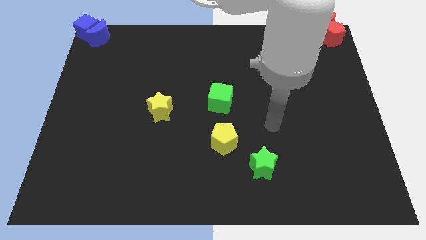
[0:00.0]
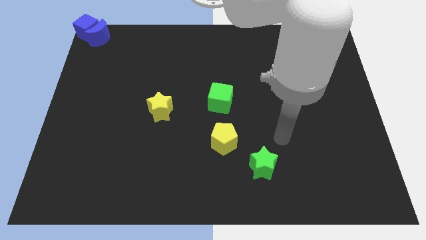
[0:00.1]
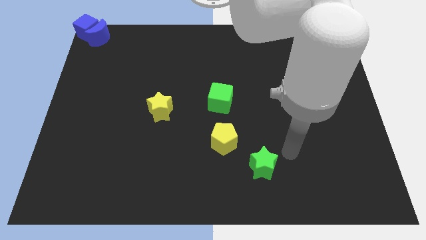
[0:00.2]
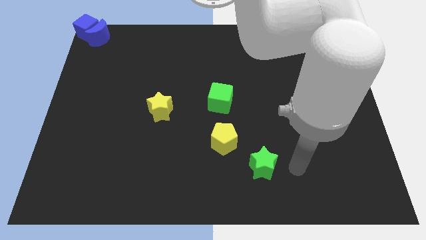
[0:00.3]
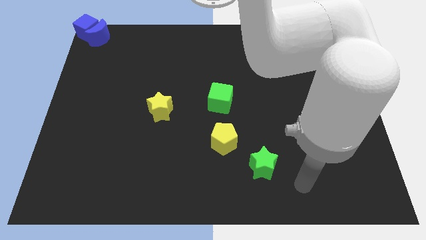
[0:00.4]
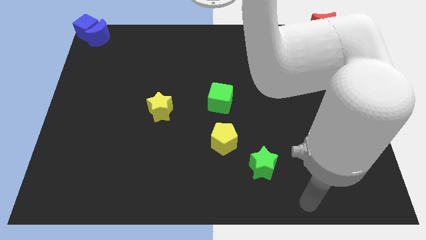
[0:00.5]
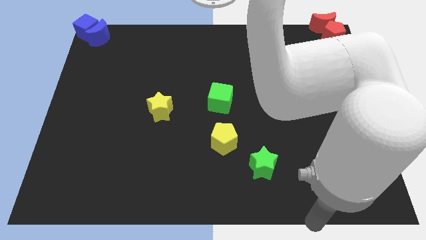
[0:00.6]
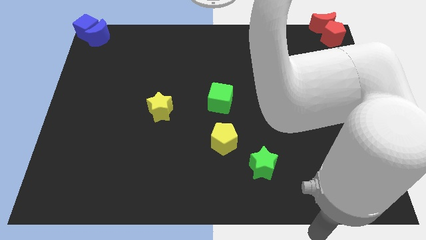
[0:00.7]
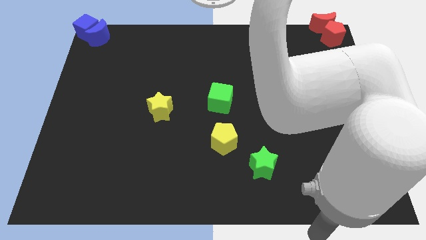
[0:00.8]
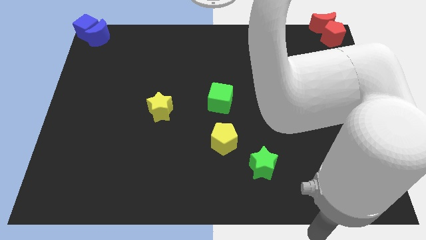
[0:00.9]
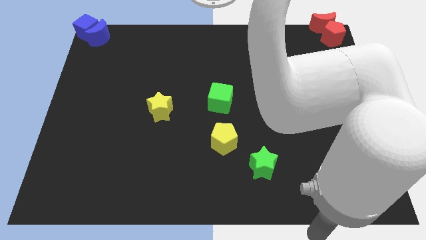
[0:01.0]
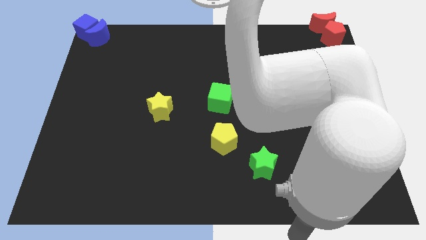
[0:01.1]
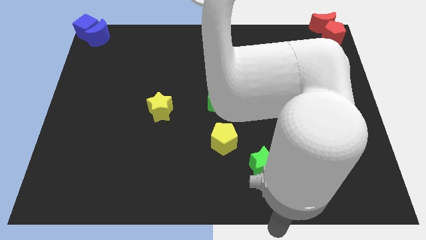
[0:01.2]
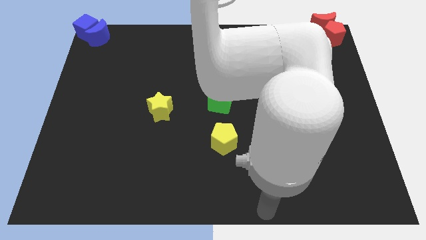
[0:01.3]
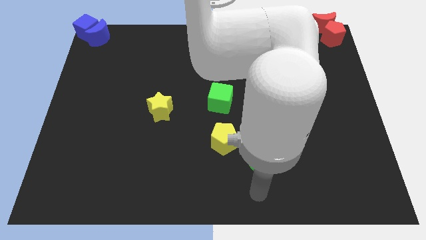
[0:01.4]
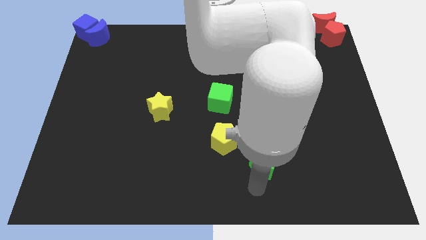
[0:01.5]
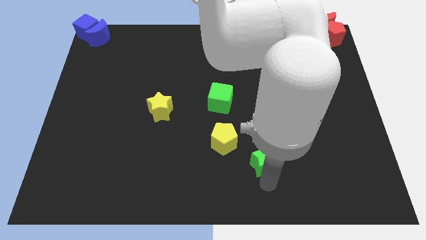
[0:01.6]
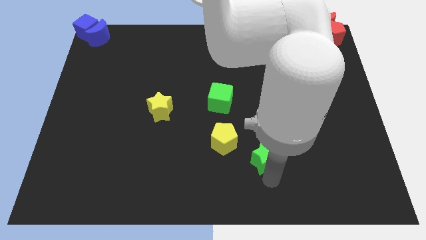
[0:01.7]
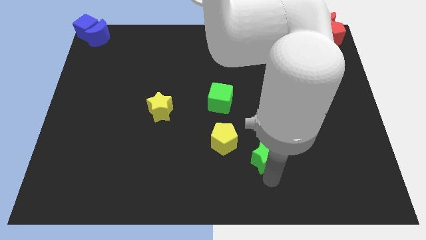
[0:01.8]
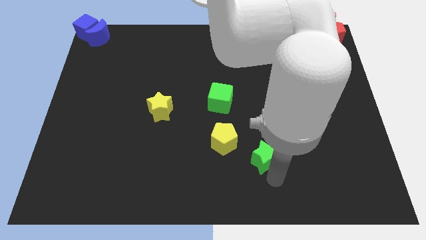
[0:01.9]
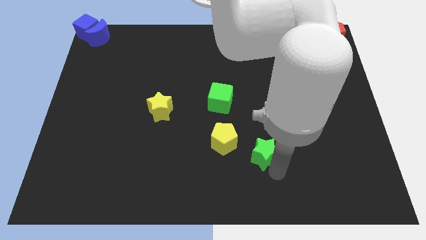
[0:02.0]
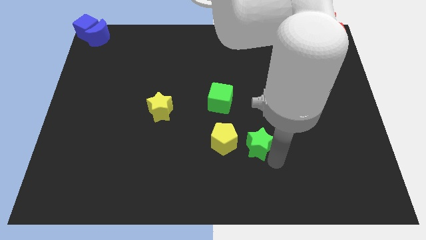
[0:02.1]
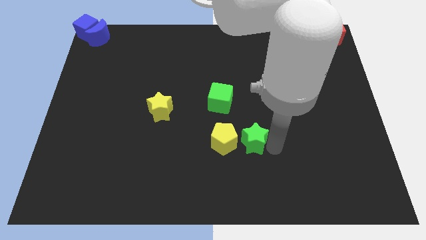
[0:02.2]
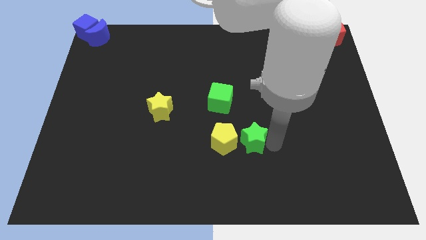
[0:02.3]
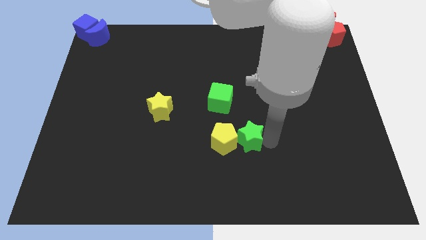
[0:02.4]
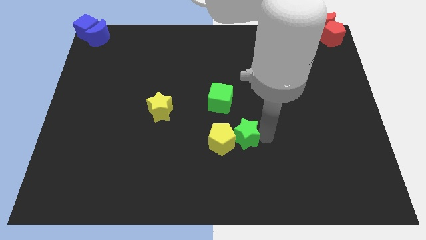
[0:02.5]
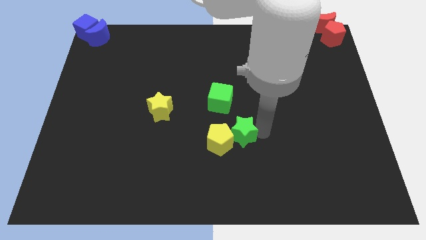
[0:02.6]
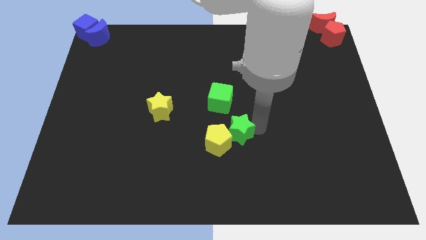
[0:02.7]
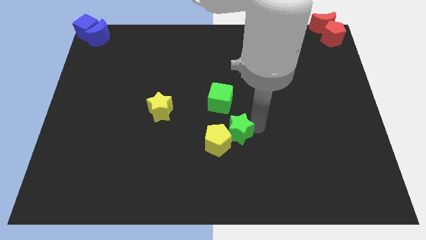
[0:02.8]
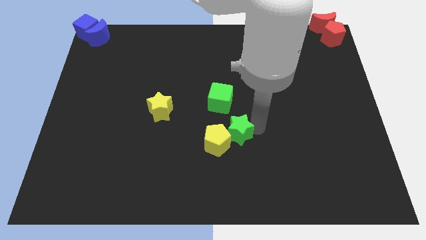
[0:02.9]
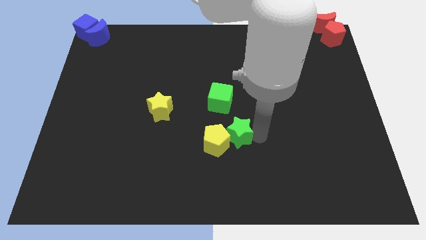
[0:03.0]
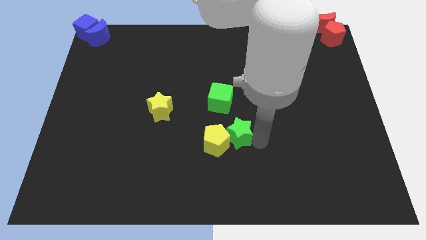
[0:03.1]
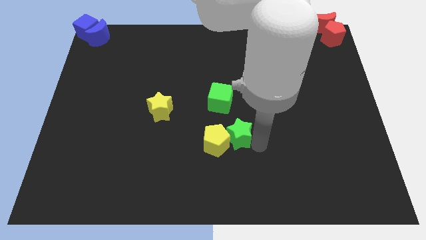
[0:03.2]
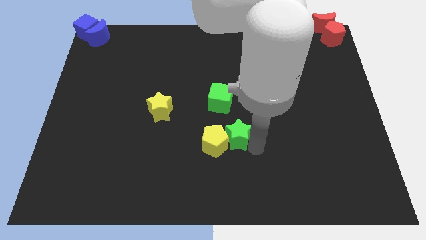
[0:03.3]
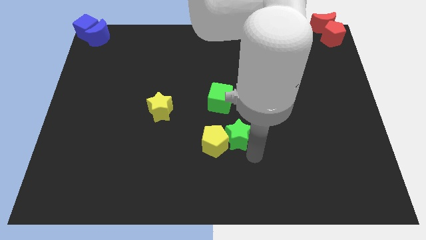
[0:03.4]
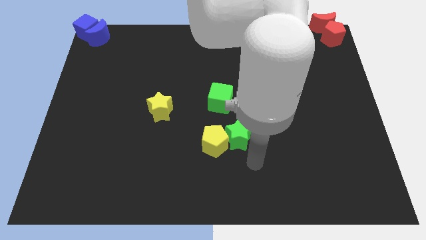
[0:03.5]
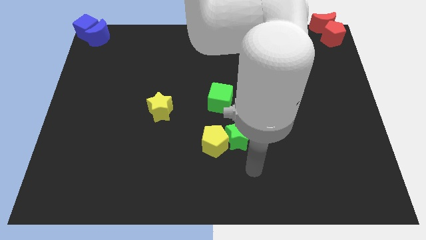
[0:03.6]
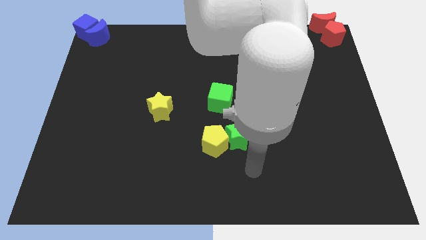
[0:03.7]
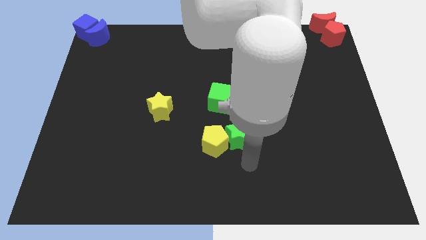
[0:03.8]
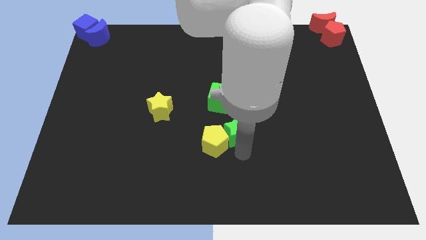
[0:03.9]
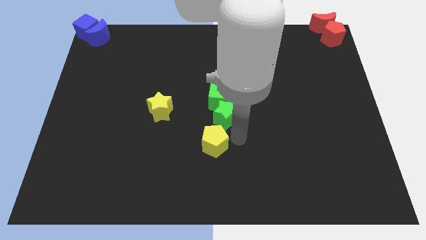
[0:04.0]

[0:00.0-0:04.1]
place the green star in between the yellow pentagon and green cube

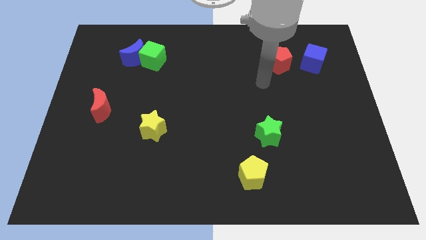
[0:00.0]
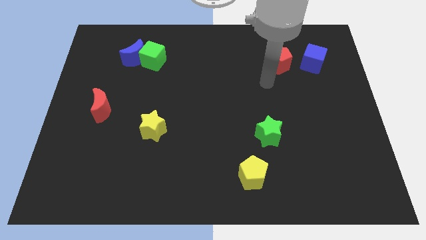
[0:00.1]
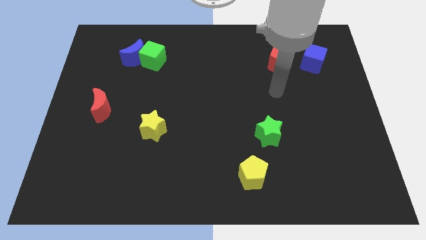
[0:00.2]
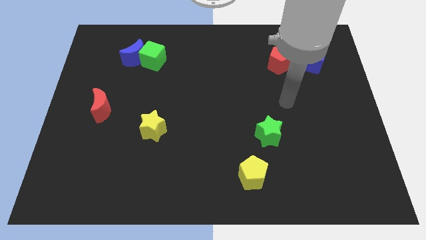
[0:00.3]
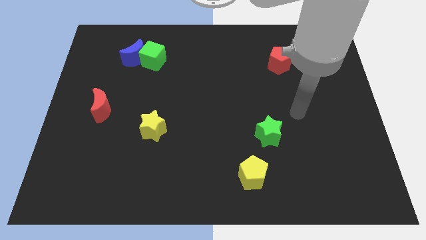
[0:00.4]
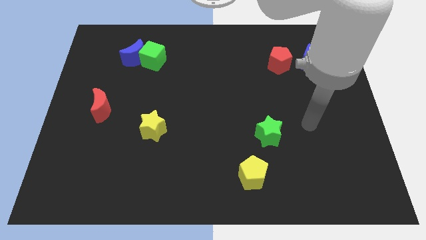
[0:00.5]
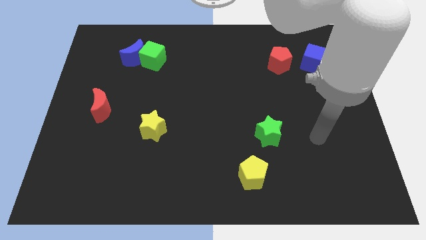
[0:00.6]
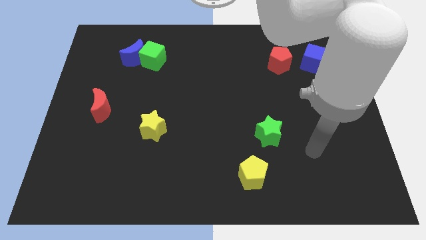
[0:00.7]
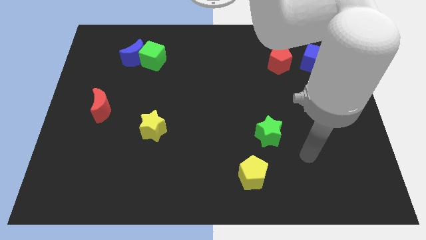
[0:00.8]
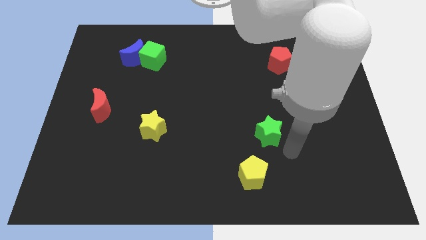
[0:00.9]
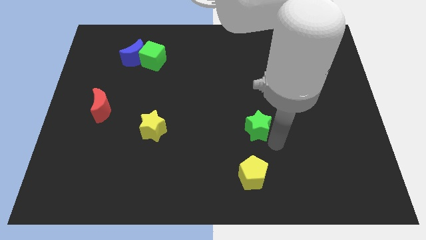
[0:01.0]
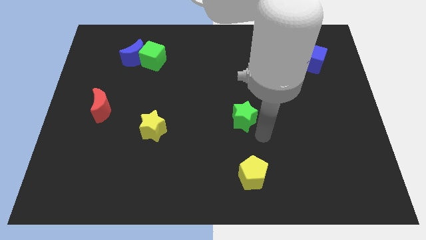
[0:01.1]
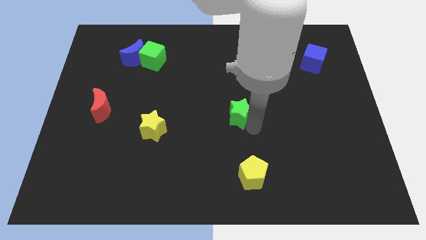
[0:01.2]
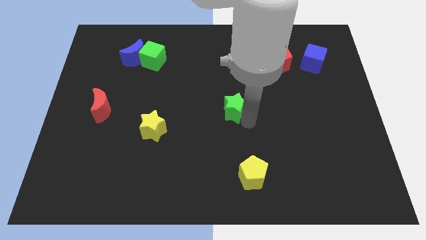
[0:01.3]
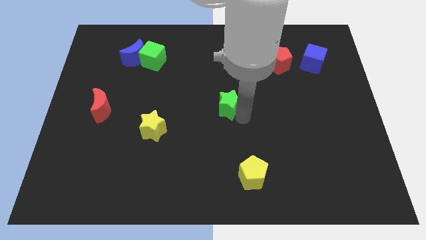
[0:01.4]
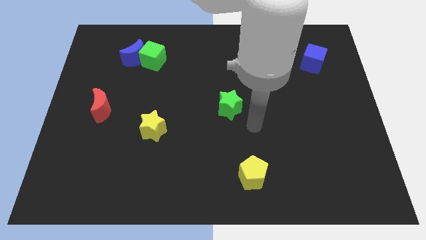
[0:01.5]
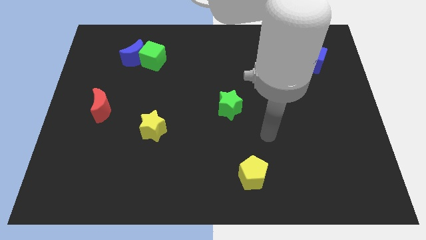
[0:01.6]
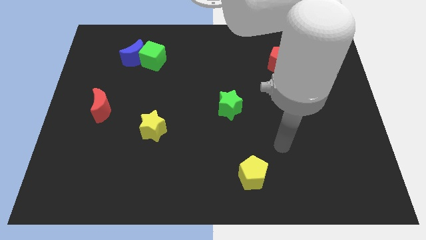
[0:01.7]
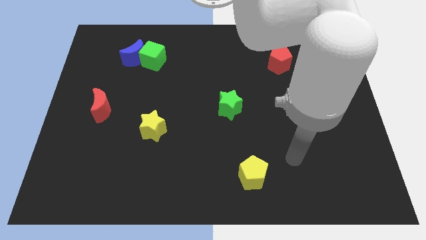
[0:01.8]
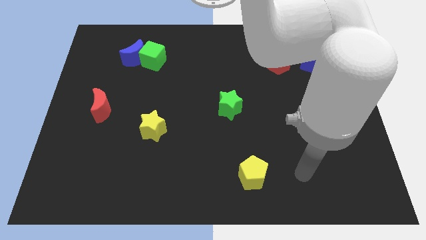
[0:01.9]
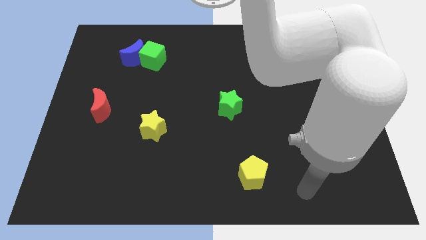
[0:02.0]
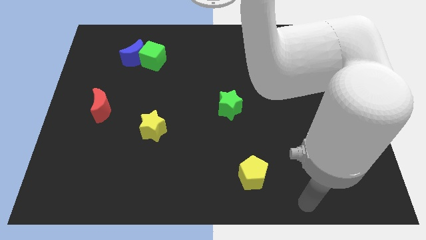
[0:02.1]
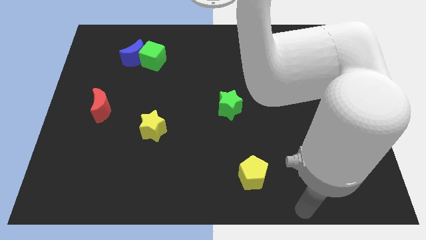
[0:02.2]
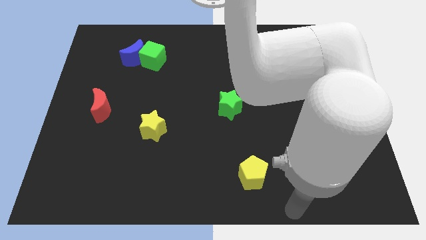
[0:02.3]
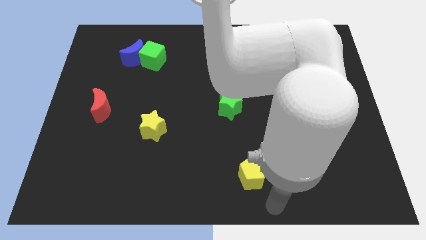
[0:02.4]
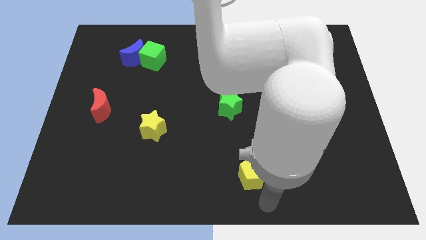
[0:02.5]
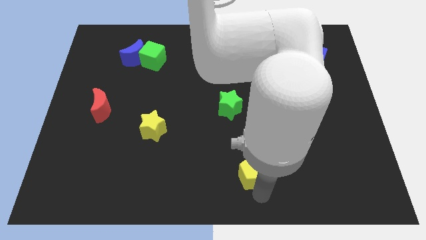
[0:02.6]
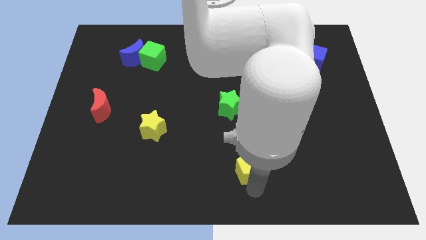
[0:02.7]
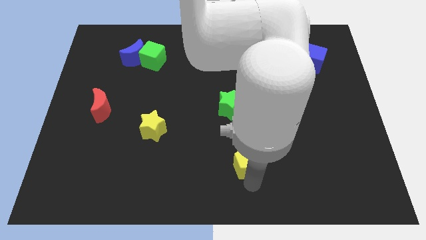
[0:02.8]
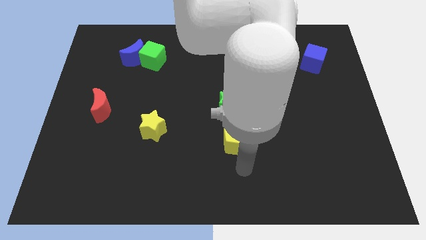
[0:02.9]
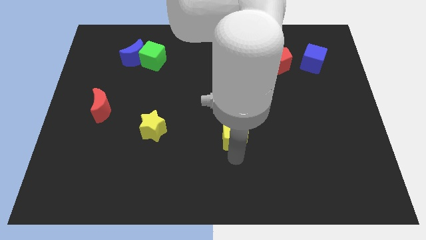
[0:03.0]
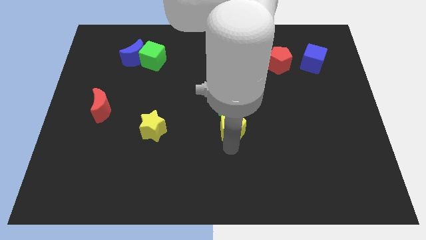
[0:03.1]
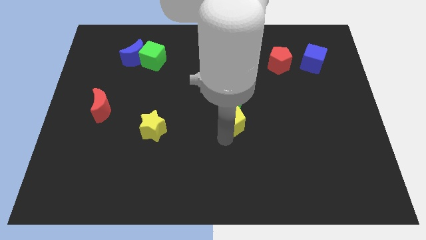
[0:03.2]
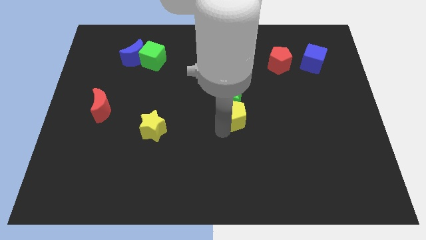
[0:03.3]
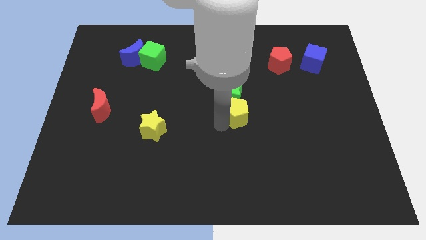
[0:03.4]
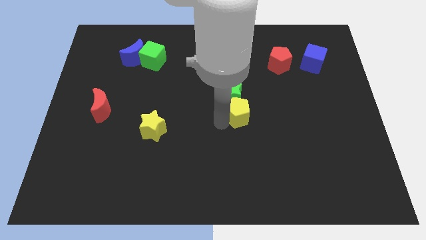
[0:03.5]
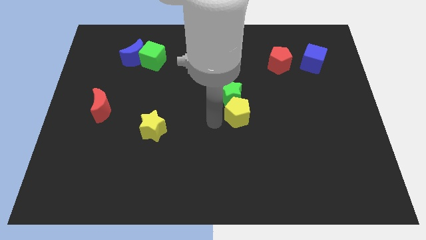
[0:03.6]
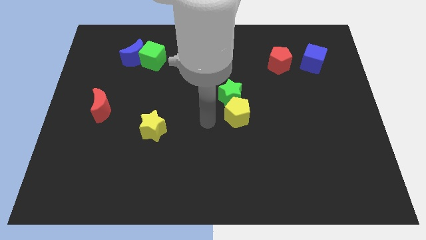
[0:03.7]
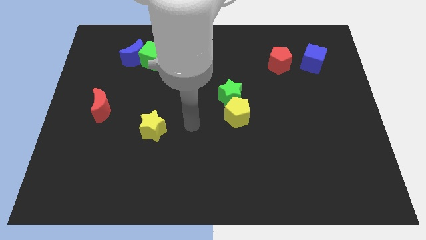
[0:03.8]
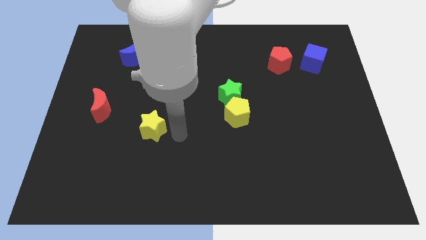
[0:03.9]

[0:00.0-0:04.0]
move the green star and yellow pentagon towards the center

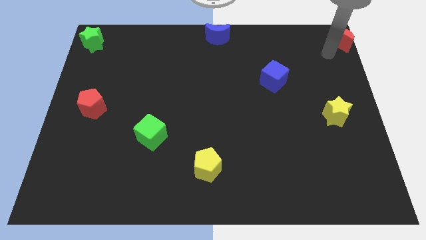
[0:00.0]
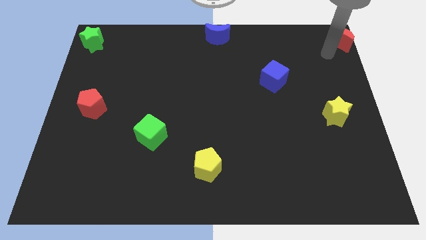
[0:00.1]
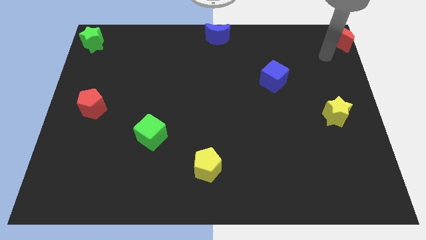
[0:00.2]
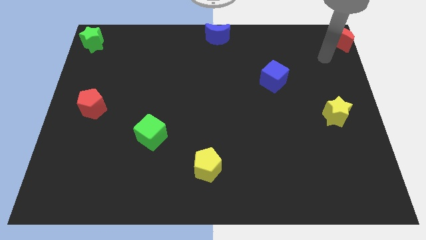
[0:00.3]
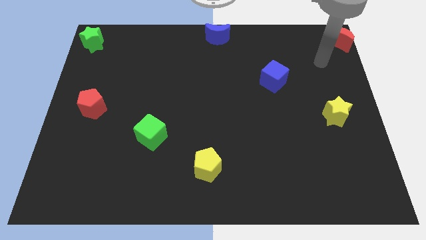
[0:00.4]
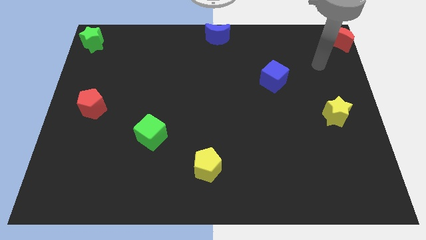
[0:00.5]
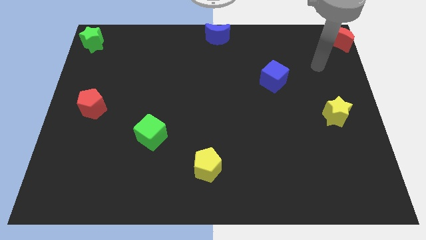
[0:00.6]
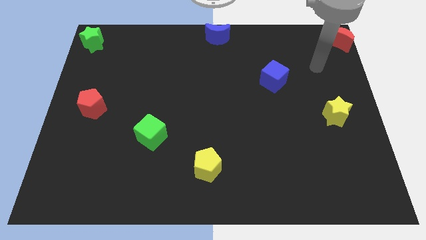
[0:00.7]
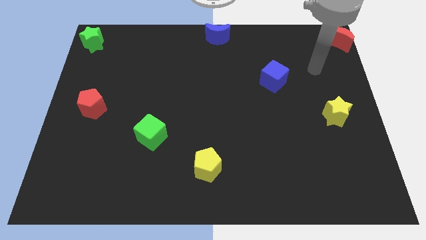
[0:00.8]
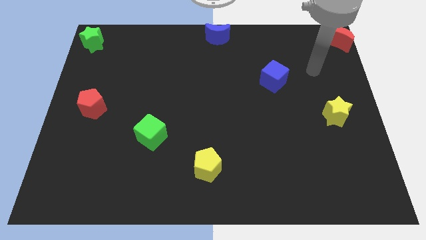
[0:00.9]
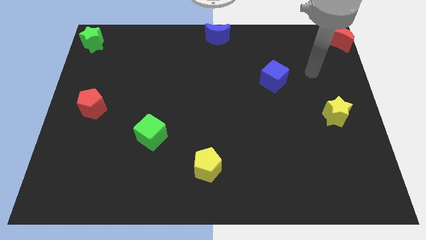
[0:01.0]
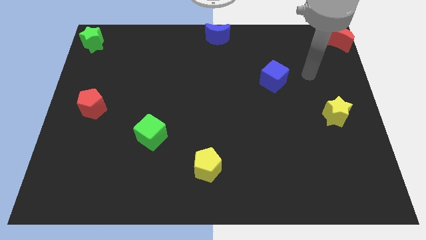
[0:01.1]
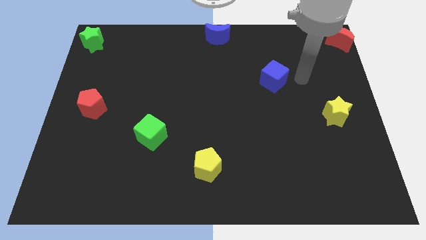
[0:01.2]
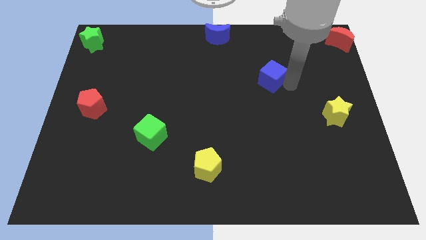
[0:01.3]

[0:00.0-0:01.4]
move the arm away from red moon
